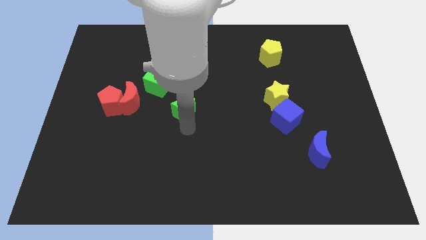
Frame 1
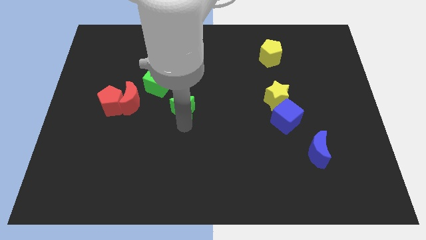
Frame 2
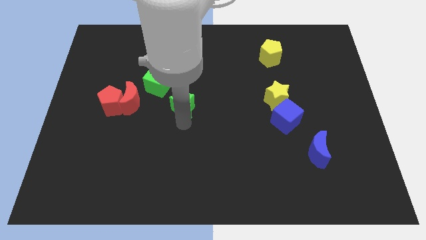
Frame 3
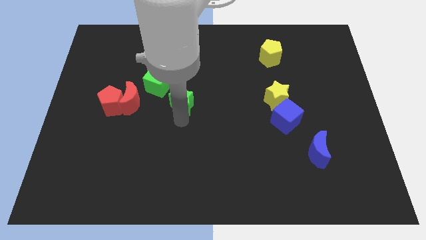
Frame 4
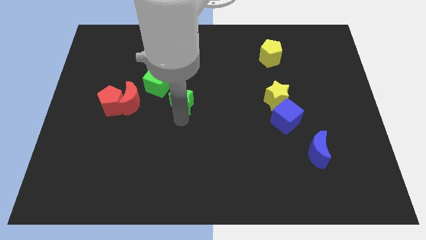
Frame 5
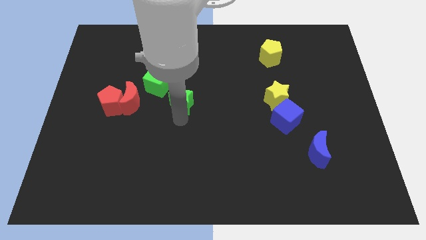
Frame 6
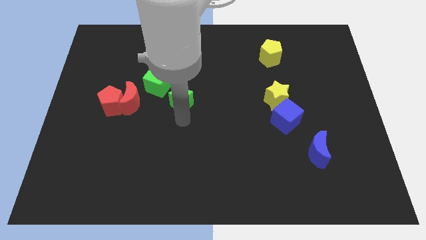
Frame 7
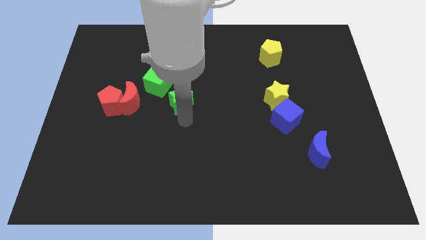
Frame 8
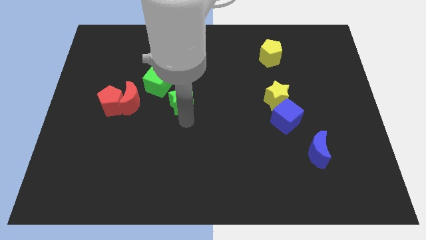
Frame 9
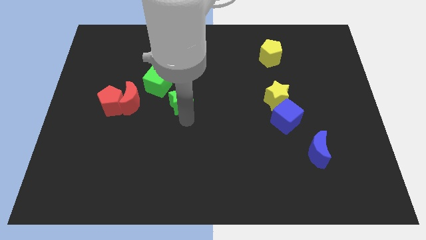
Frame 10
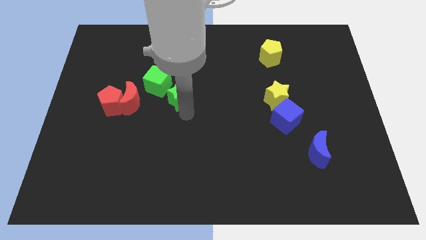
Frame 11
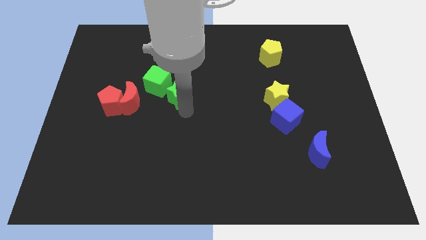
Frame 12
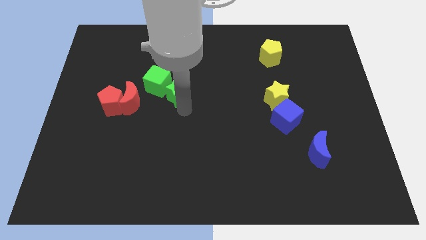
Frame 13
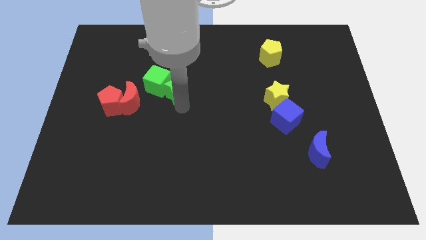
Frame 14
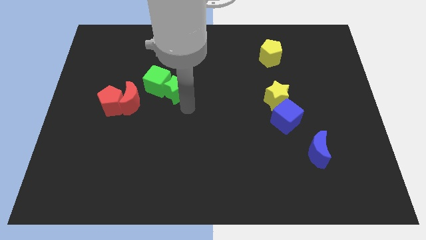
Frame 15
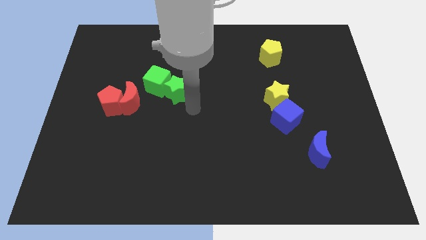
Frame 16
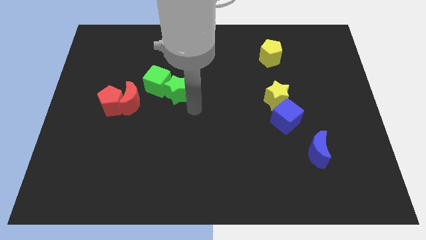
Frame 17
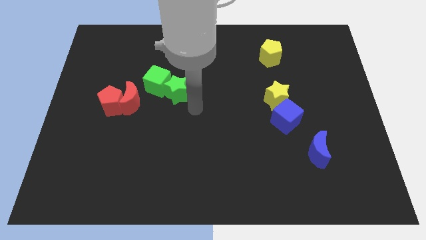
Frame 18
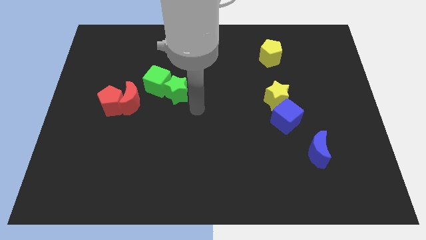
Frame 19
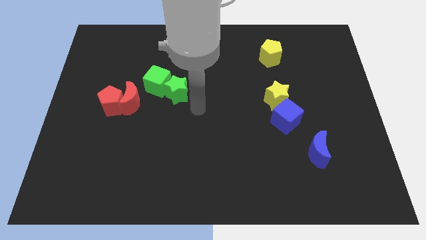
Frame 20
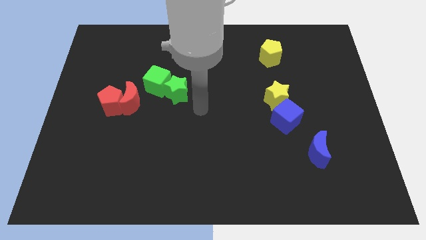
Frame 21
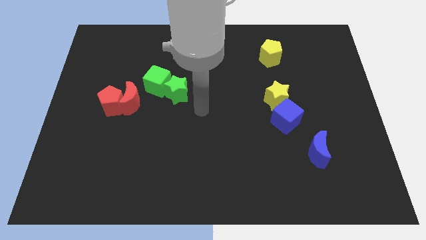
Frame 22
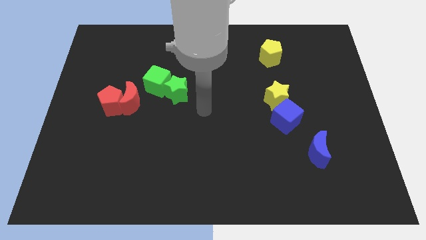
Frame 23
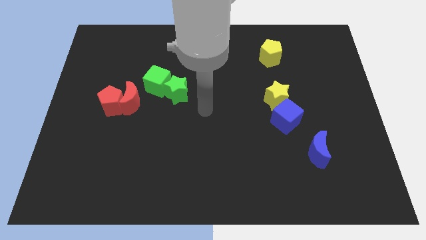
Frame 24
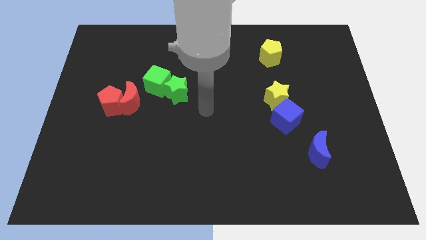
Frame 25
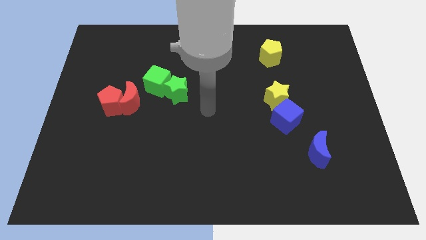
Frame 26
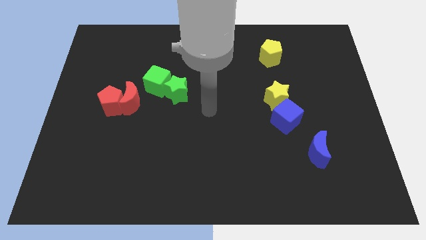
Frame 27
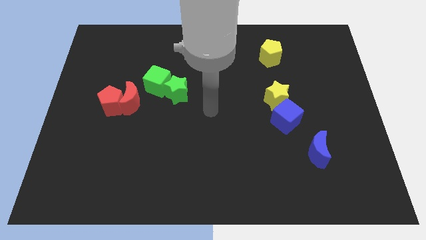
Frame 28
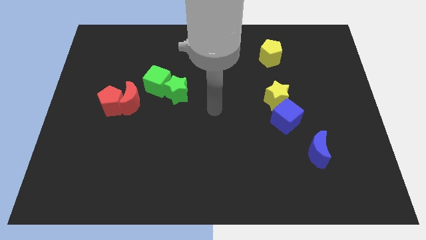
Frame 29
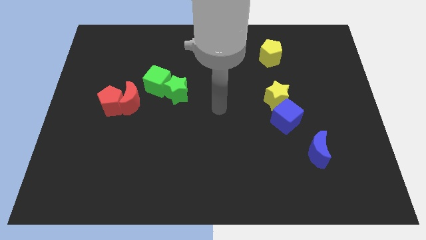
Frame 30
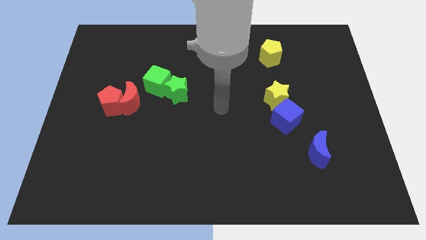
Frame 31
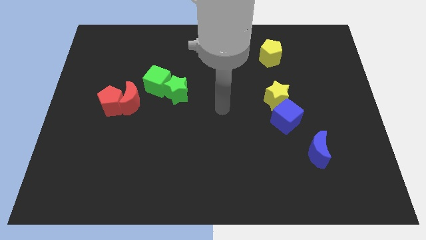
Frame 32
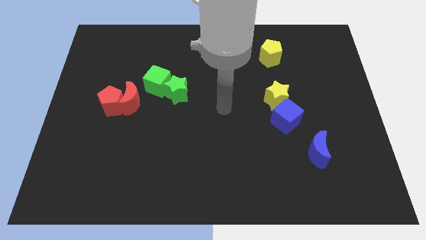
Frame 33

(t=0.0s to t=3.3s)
move your arm away from the green star

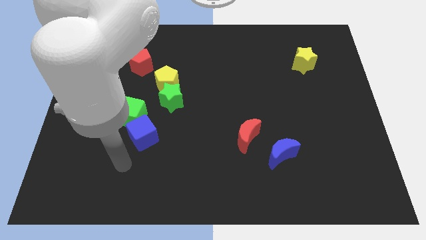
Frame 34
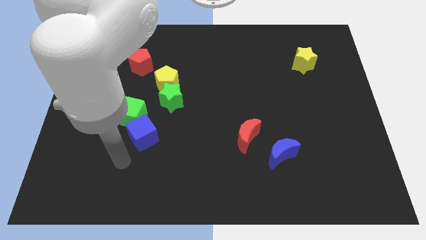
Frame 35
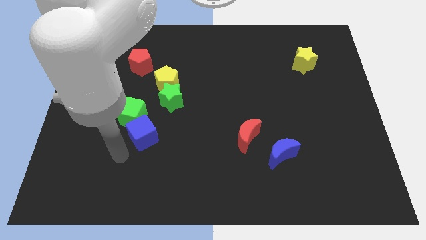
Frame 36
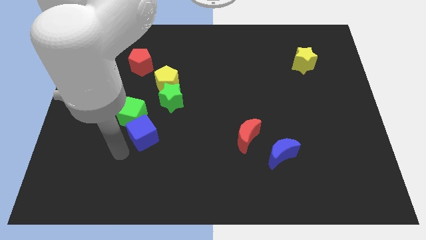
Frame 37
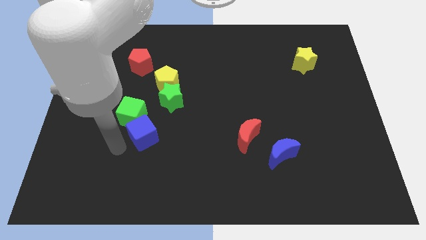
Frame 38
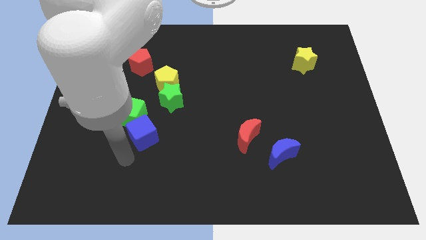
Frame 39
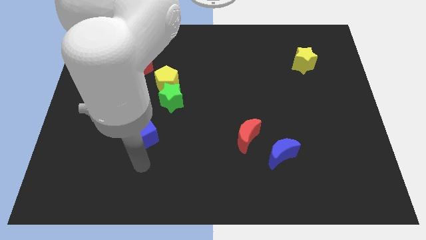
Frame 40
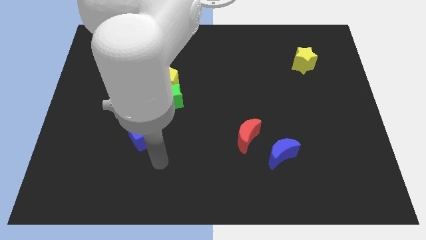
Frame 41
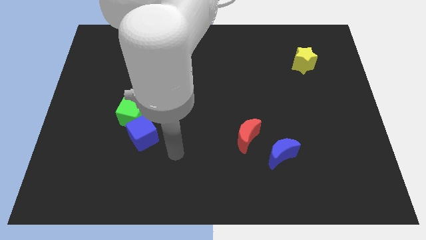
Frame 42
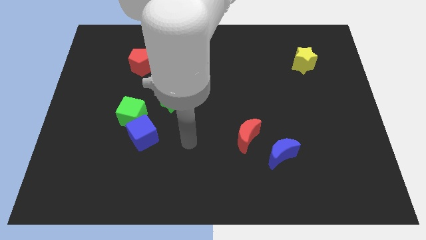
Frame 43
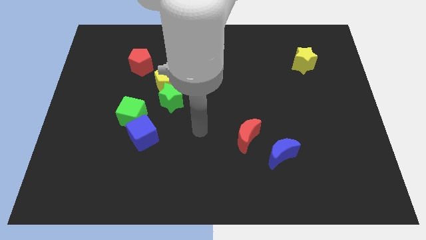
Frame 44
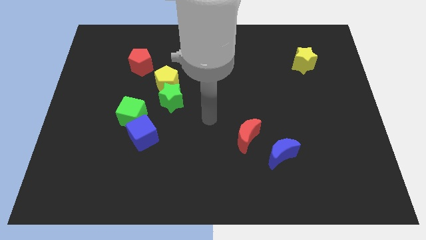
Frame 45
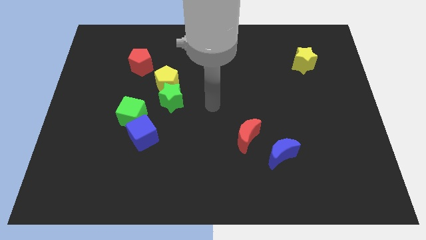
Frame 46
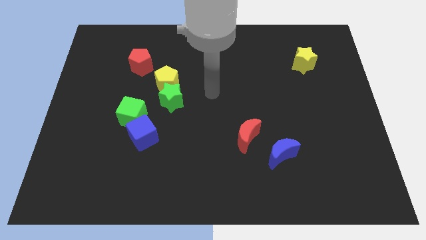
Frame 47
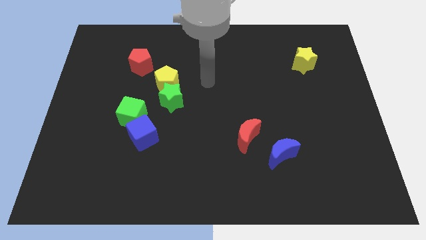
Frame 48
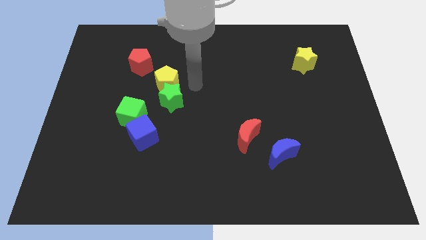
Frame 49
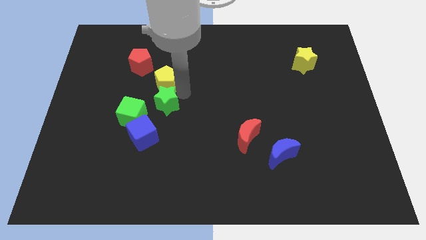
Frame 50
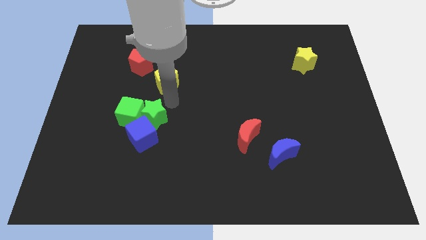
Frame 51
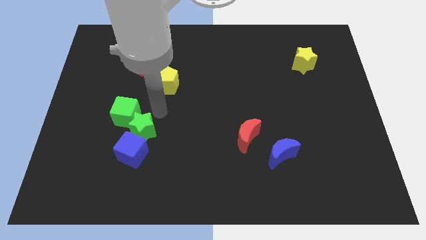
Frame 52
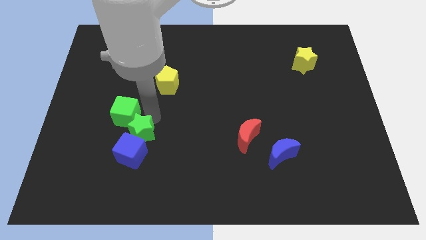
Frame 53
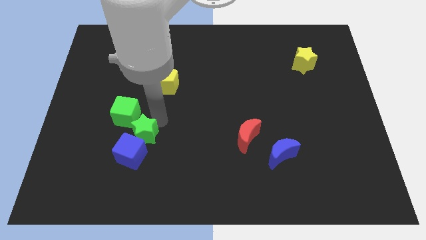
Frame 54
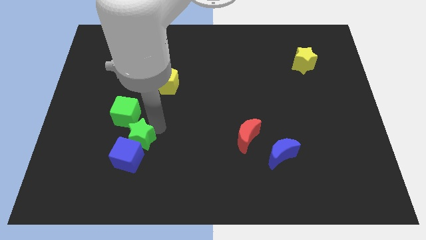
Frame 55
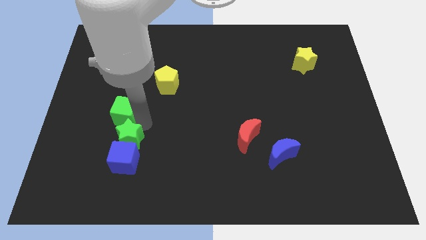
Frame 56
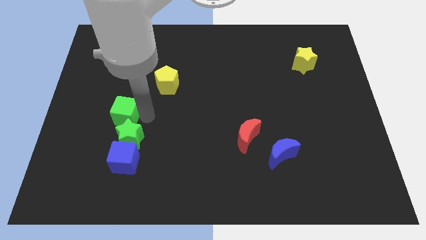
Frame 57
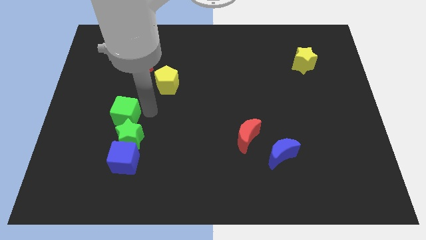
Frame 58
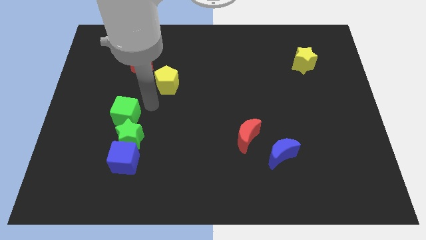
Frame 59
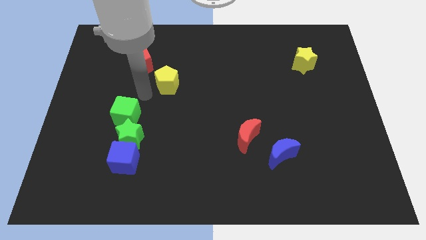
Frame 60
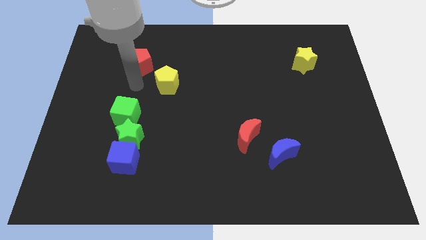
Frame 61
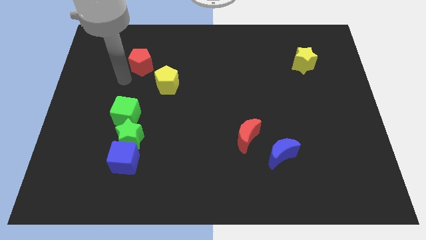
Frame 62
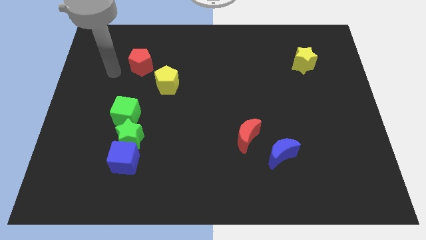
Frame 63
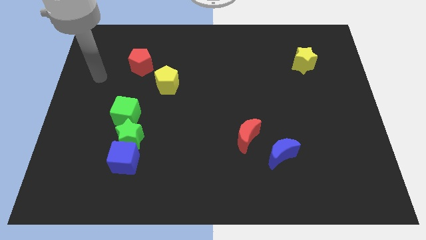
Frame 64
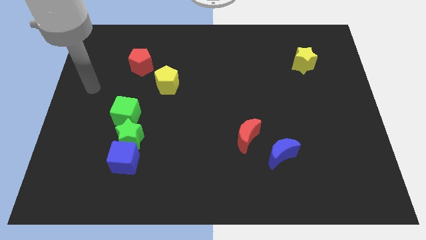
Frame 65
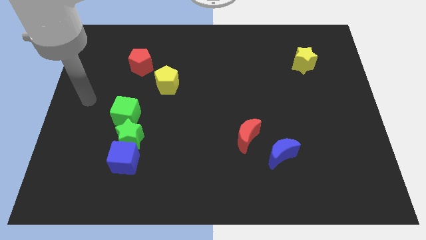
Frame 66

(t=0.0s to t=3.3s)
push the green star in between the green and blue cube

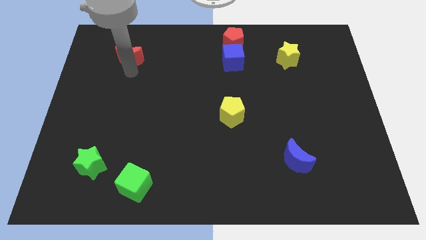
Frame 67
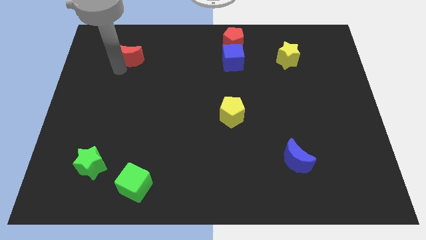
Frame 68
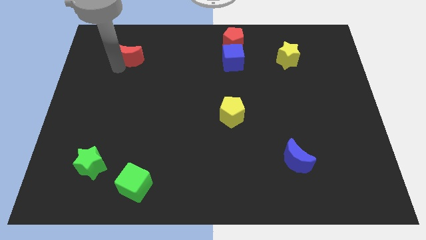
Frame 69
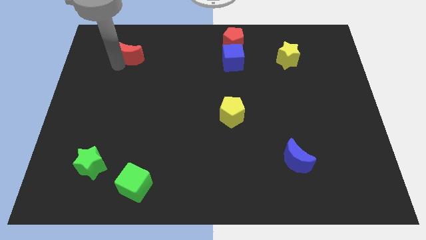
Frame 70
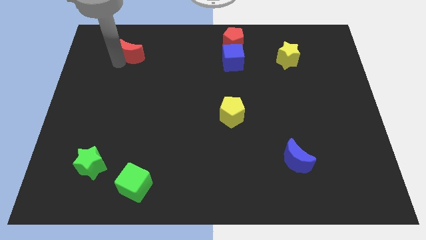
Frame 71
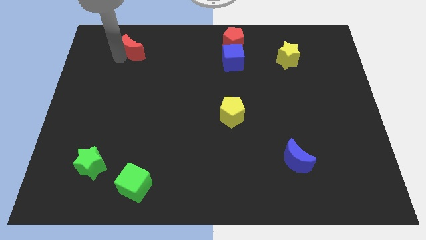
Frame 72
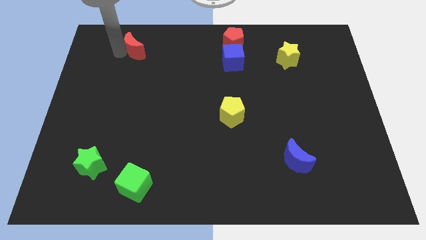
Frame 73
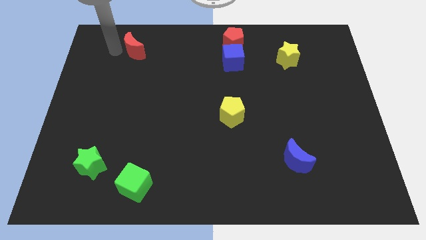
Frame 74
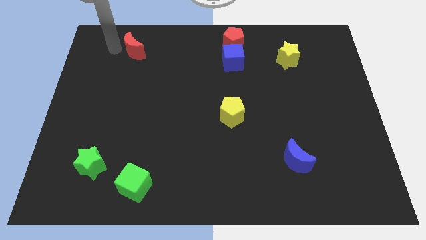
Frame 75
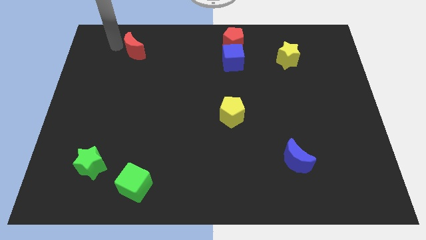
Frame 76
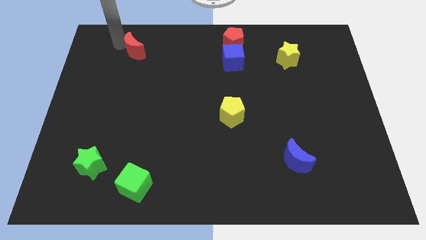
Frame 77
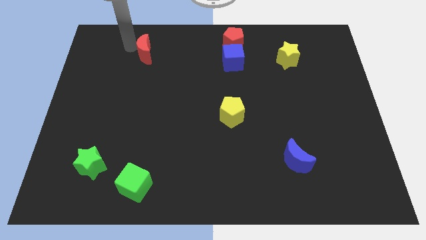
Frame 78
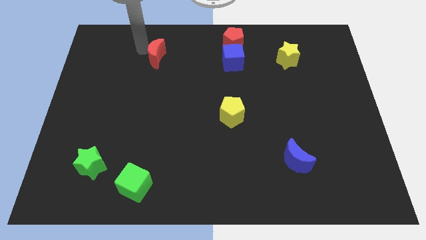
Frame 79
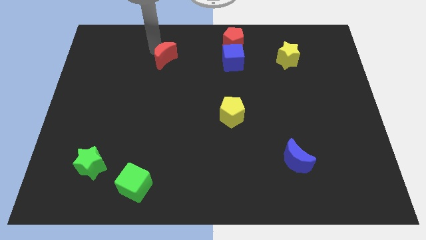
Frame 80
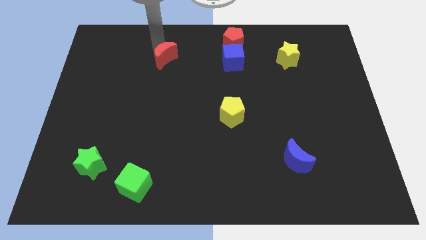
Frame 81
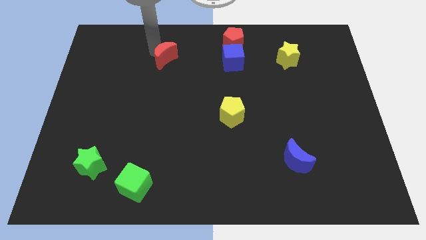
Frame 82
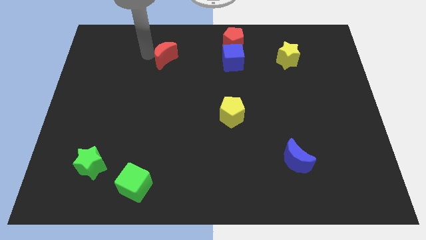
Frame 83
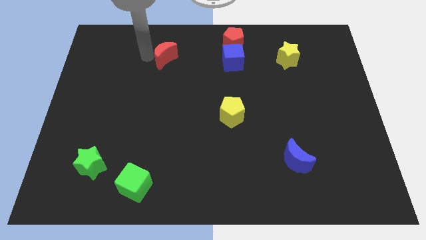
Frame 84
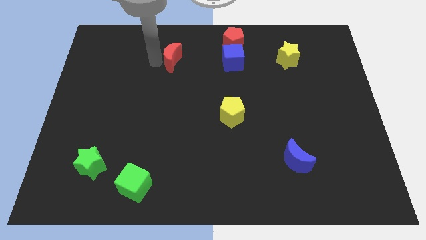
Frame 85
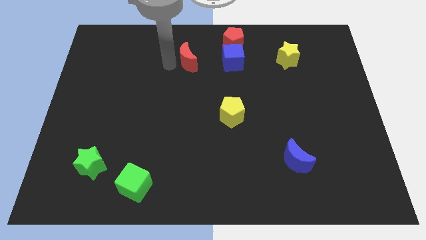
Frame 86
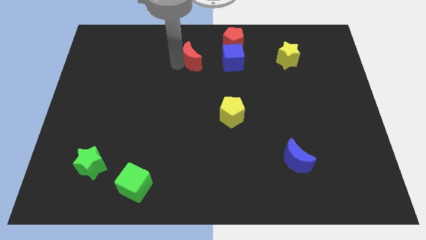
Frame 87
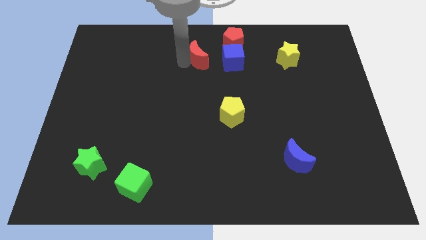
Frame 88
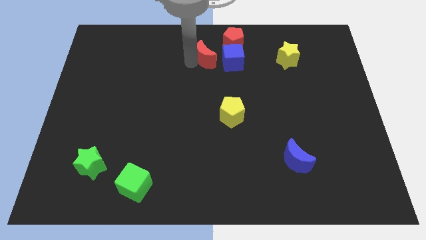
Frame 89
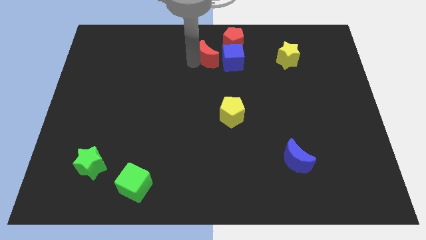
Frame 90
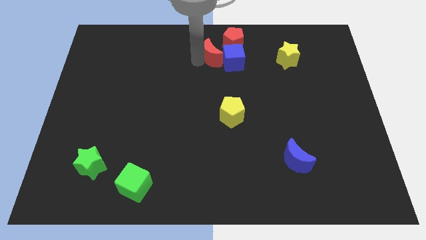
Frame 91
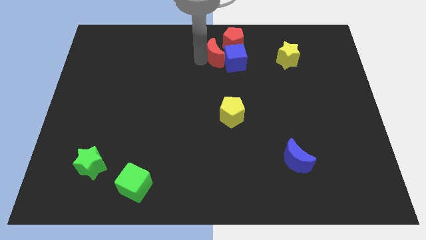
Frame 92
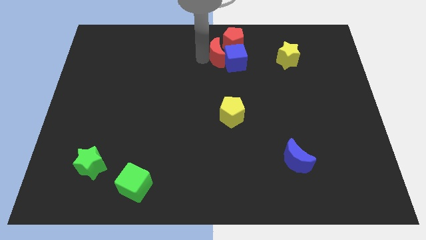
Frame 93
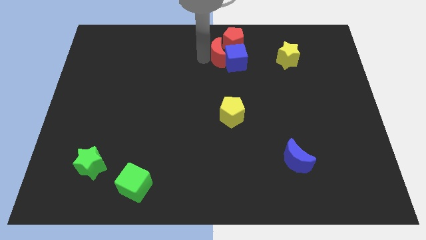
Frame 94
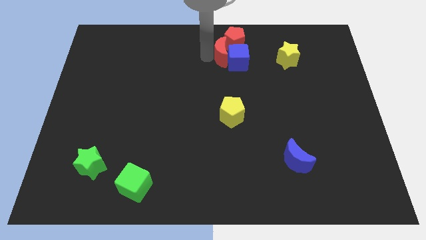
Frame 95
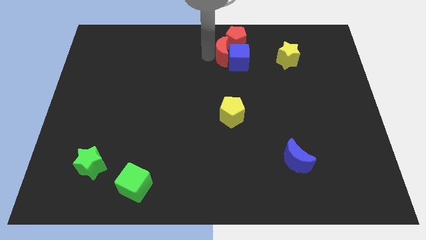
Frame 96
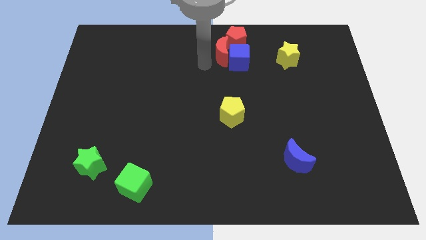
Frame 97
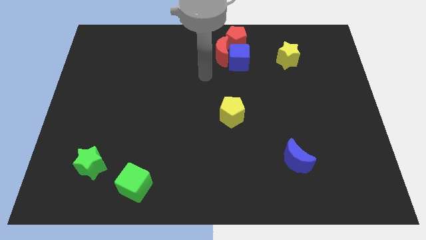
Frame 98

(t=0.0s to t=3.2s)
push red moon in to blue cube
